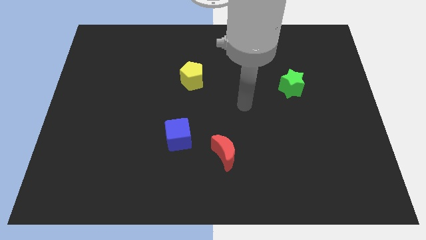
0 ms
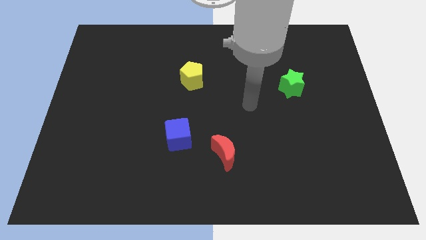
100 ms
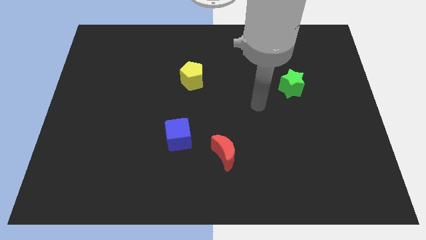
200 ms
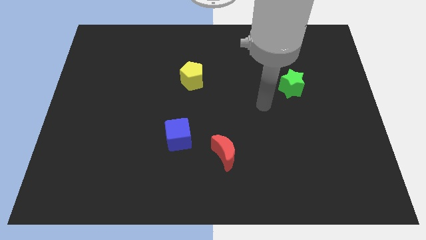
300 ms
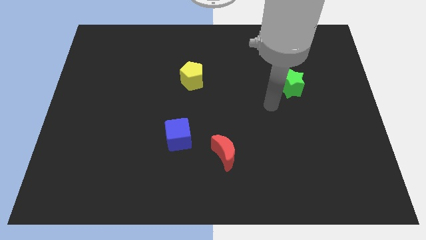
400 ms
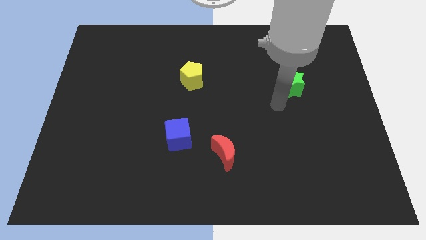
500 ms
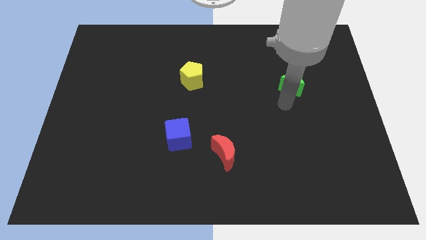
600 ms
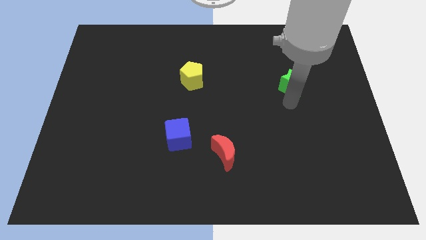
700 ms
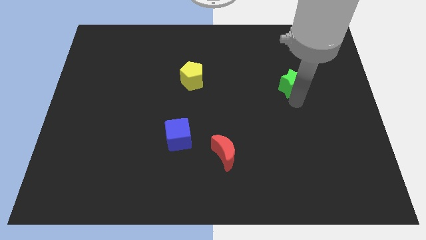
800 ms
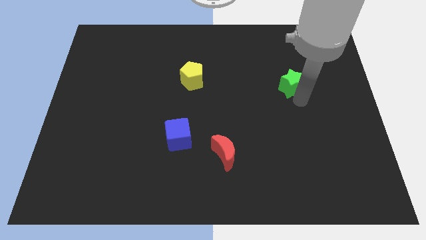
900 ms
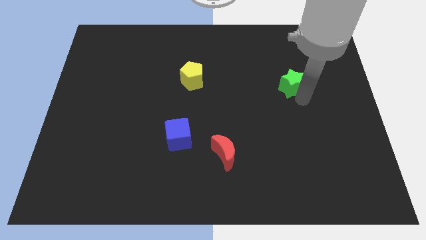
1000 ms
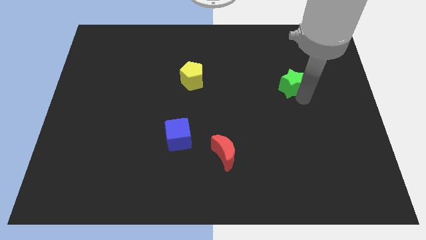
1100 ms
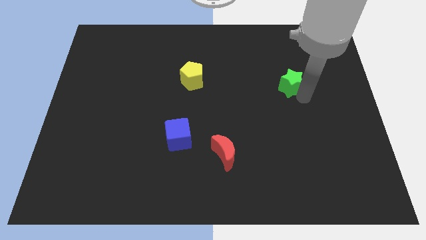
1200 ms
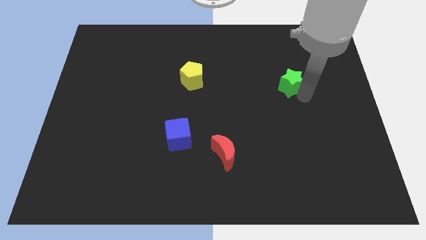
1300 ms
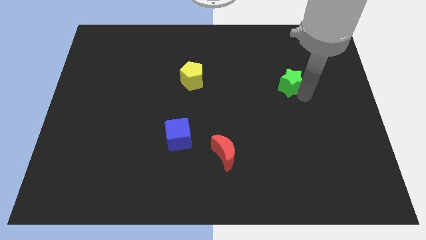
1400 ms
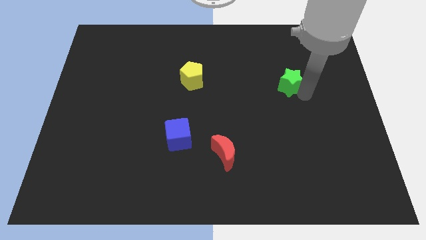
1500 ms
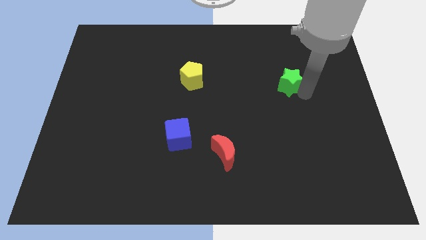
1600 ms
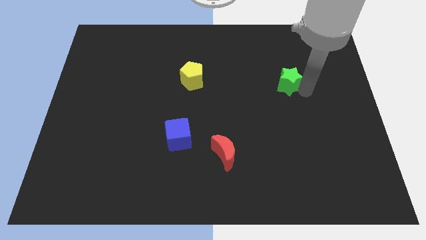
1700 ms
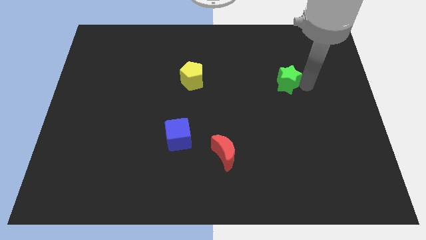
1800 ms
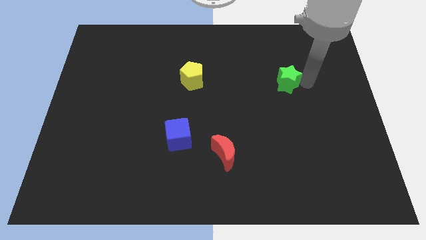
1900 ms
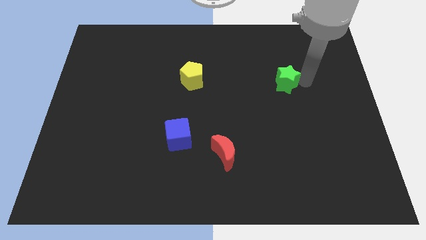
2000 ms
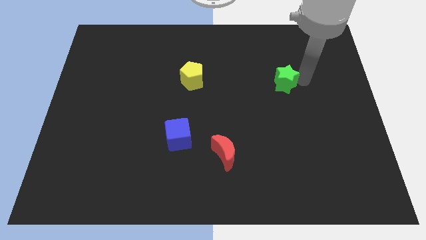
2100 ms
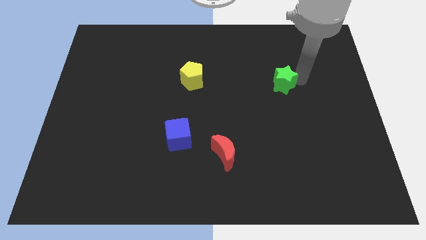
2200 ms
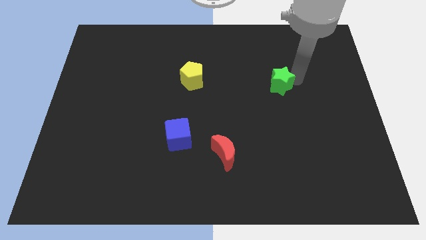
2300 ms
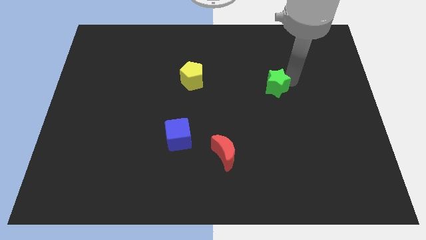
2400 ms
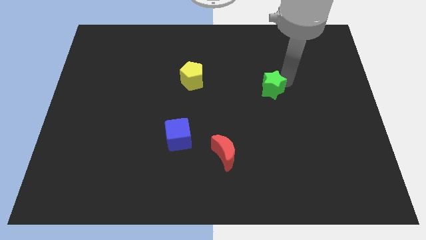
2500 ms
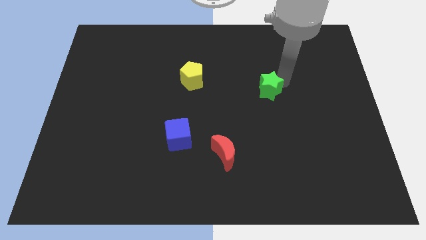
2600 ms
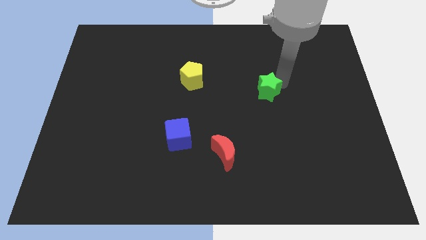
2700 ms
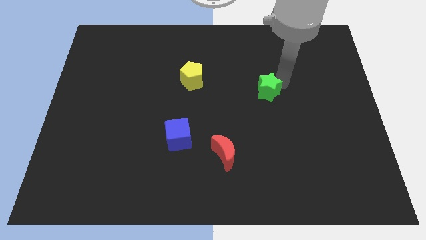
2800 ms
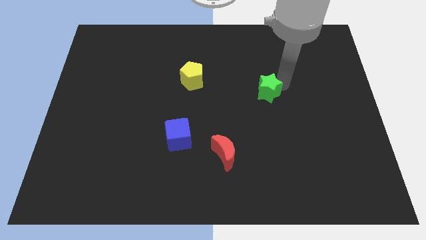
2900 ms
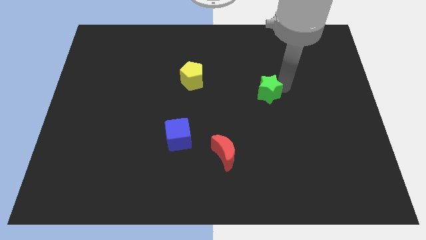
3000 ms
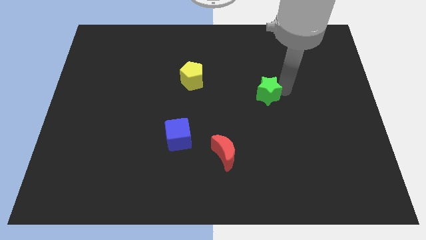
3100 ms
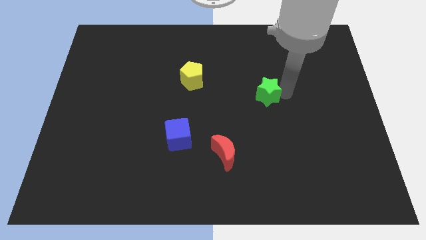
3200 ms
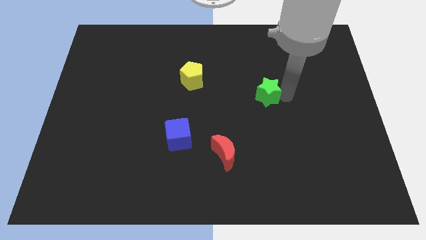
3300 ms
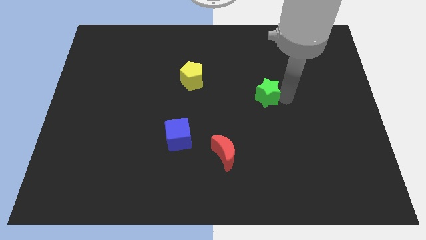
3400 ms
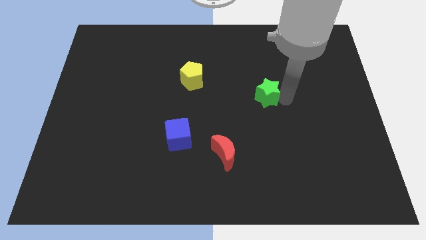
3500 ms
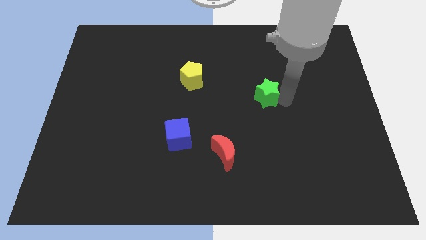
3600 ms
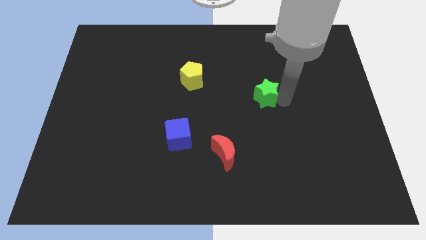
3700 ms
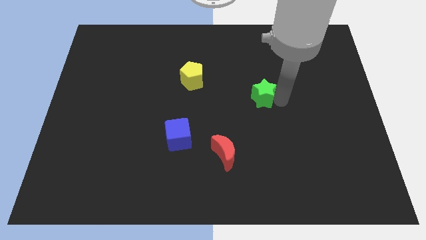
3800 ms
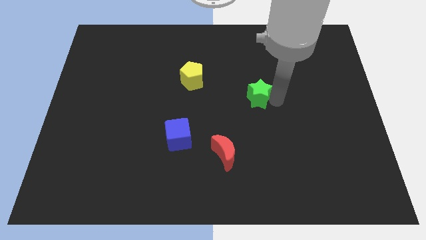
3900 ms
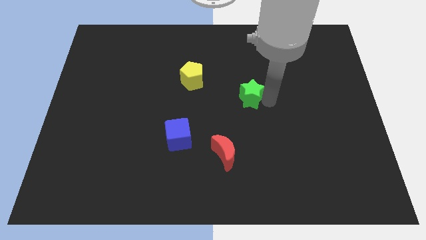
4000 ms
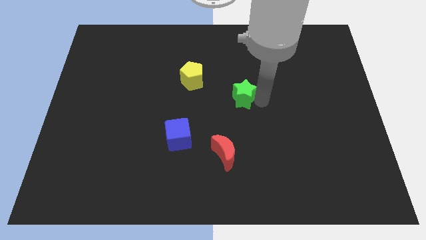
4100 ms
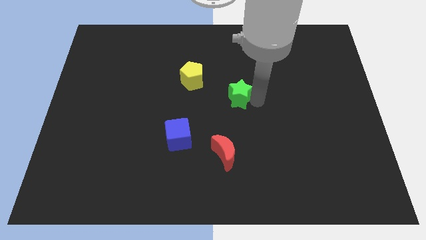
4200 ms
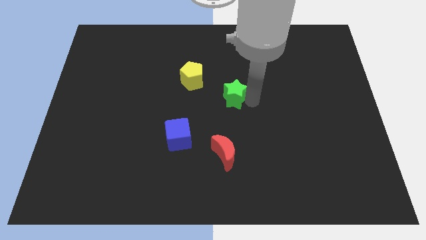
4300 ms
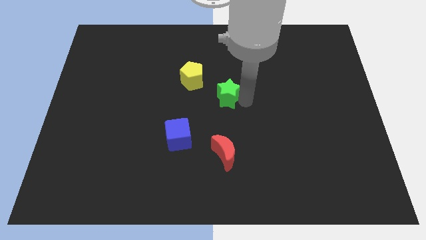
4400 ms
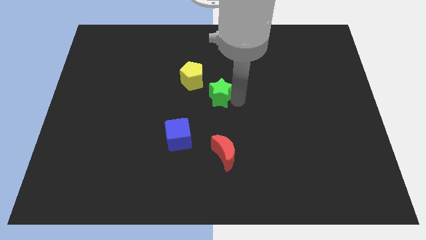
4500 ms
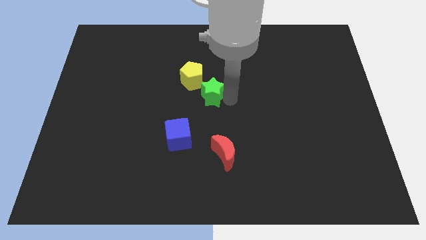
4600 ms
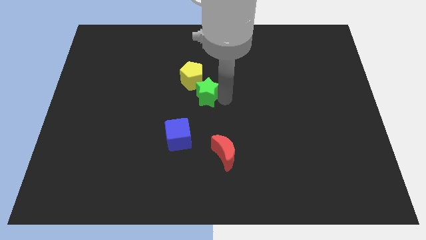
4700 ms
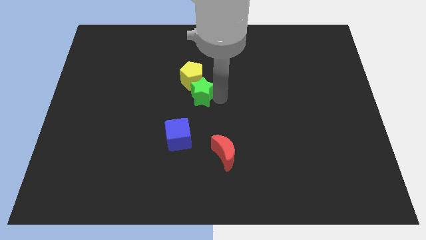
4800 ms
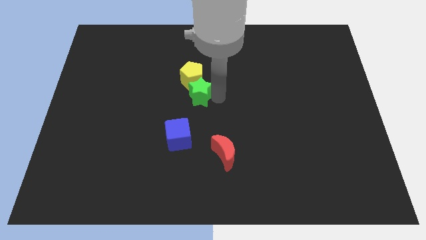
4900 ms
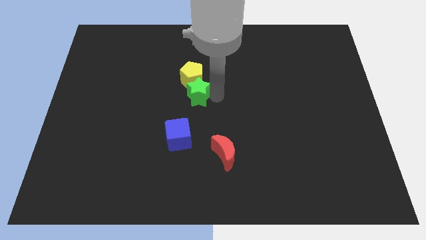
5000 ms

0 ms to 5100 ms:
push the green block towards the yellow pentagon

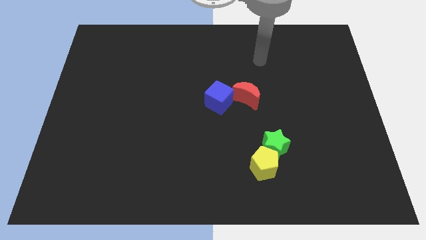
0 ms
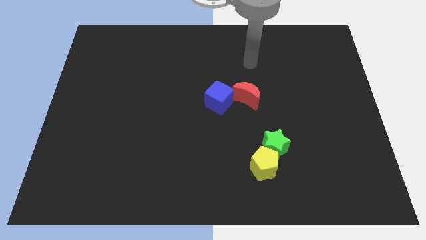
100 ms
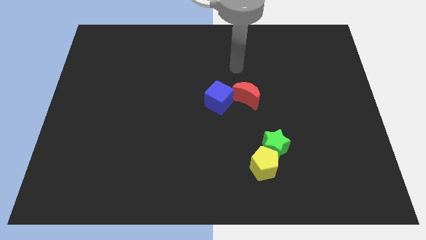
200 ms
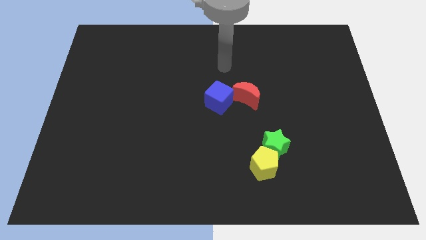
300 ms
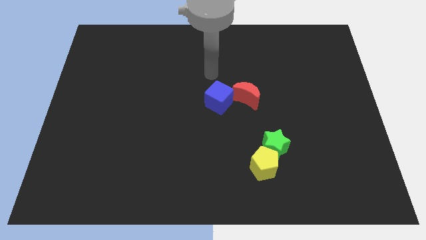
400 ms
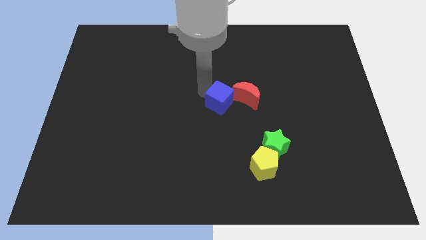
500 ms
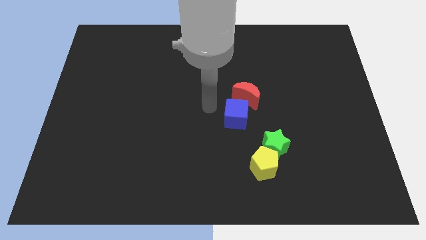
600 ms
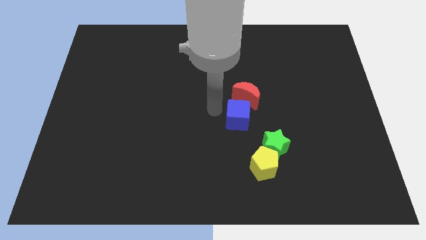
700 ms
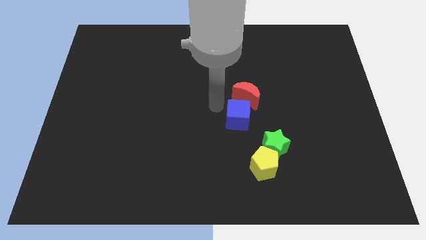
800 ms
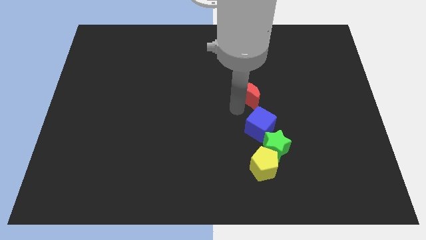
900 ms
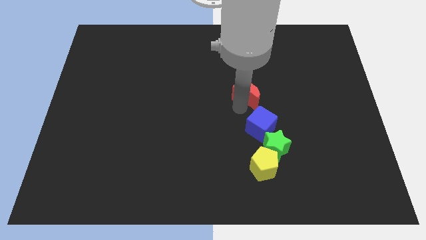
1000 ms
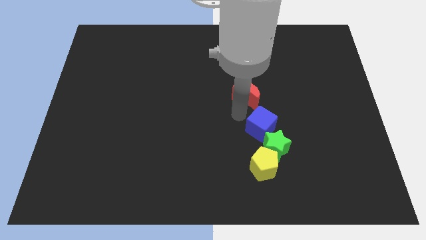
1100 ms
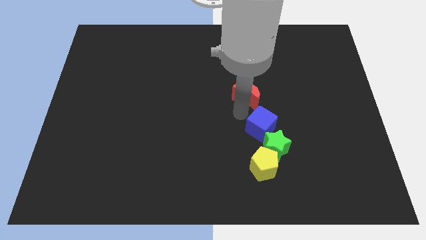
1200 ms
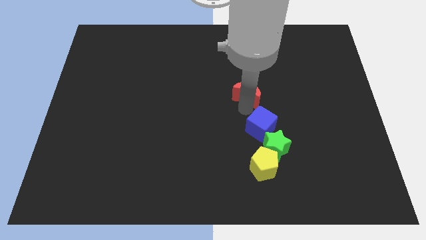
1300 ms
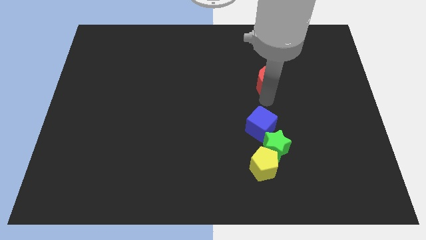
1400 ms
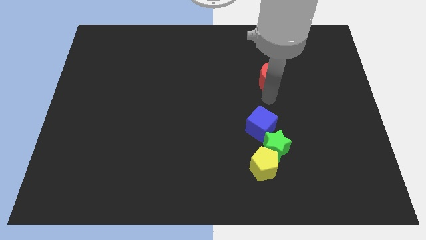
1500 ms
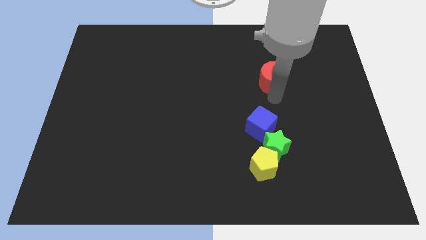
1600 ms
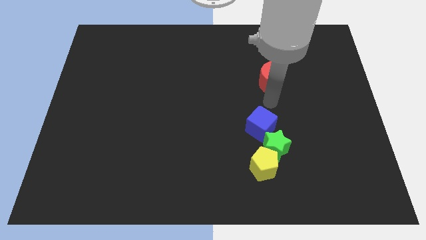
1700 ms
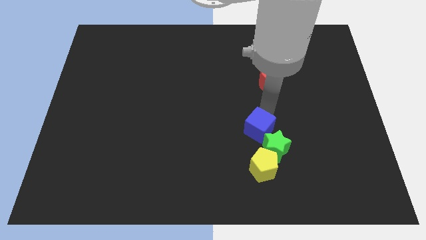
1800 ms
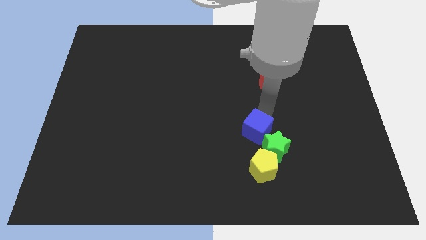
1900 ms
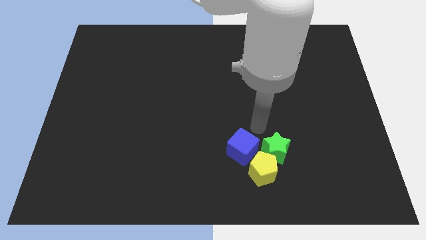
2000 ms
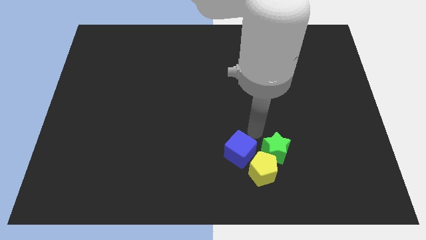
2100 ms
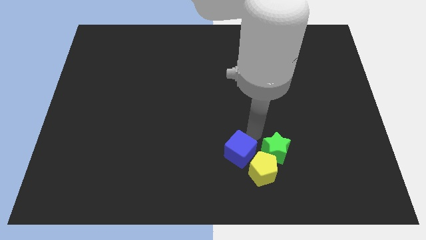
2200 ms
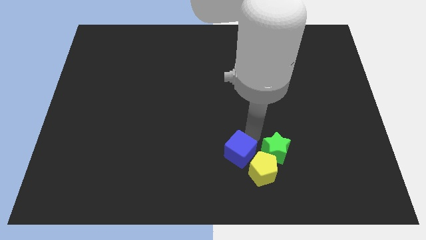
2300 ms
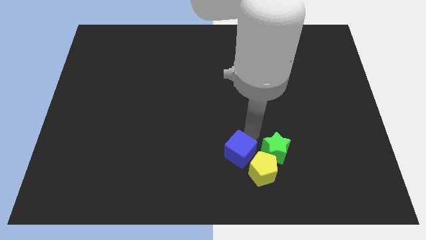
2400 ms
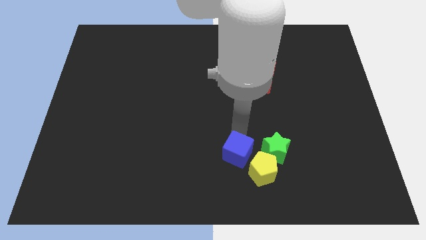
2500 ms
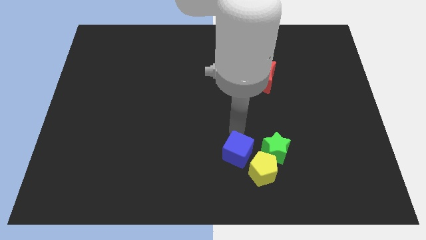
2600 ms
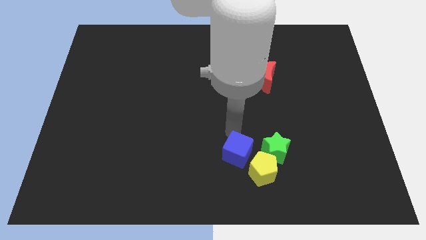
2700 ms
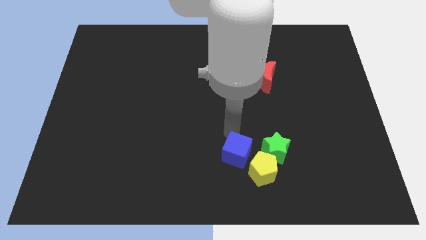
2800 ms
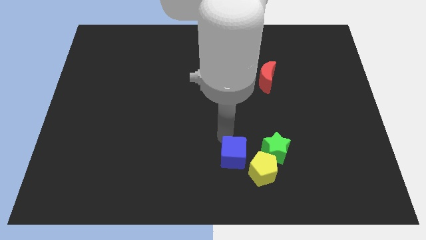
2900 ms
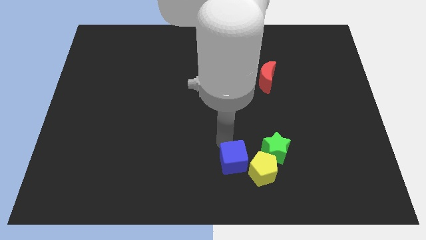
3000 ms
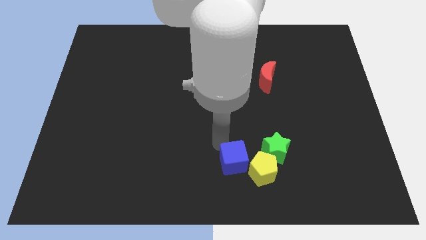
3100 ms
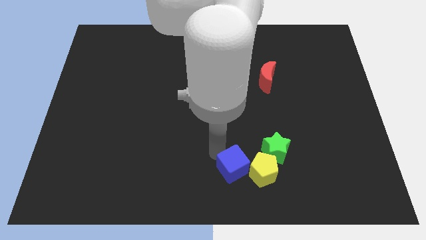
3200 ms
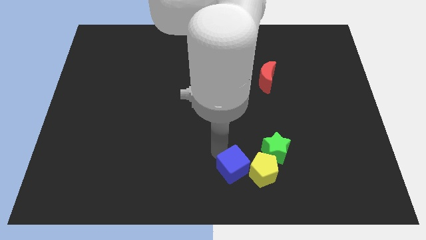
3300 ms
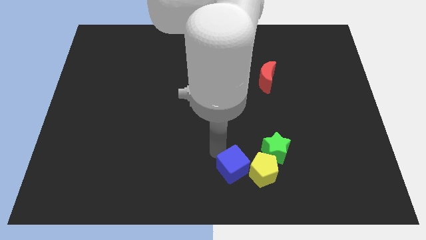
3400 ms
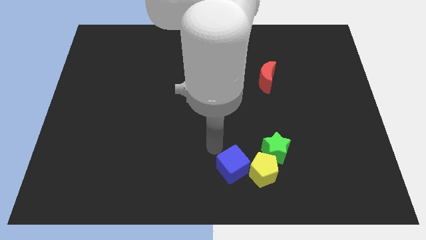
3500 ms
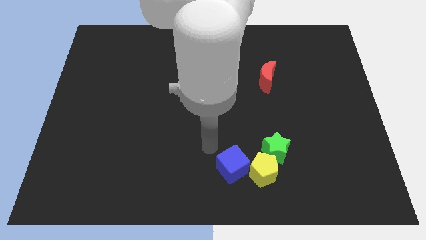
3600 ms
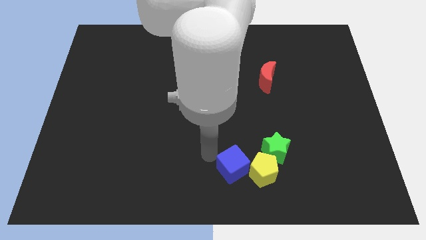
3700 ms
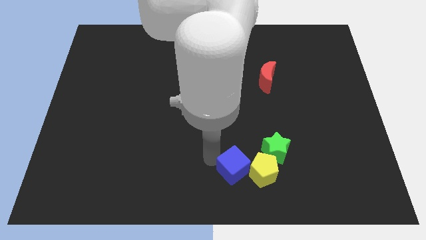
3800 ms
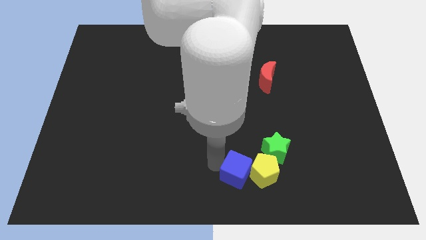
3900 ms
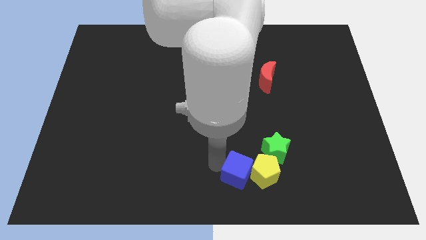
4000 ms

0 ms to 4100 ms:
put the cube to the yellow pentagon
